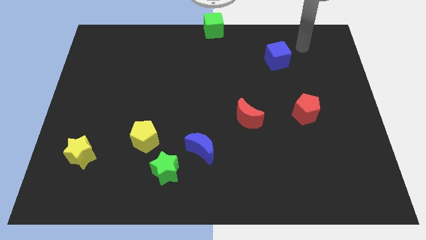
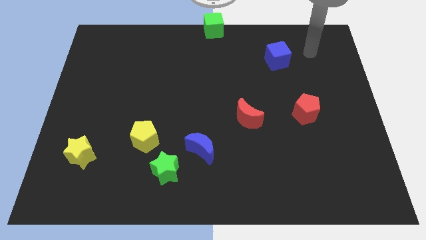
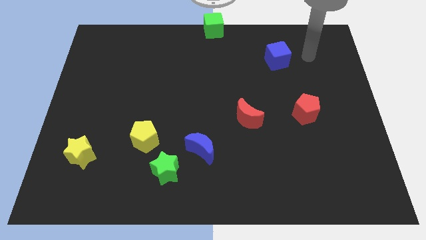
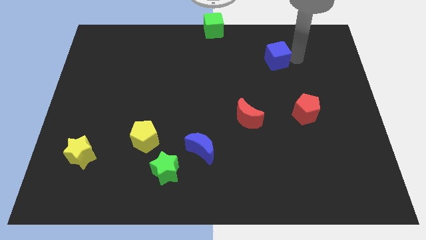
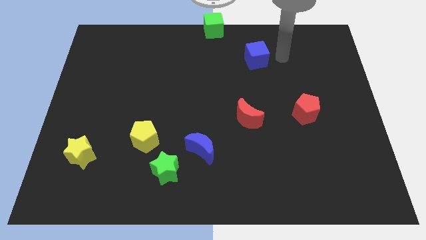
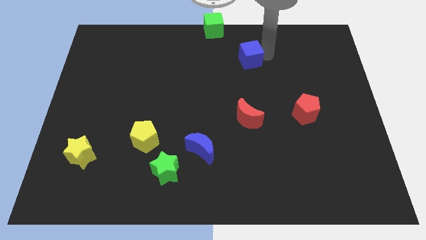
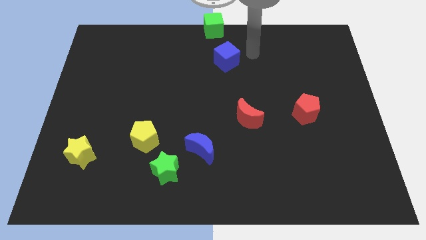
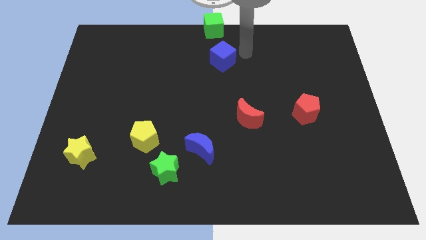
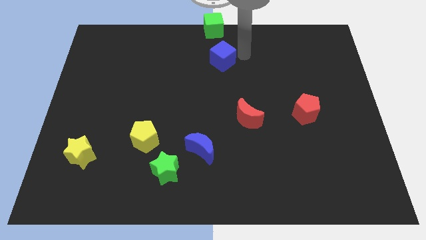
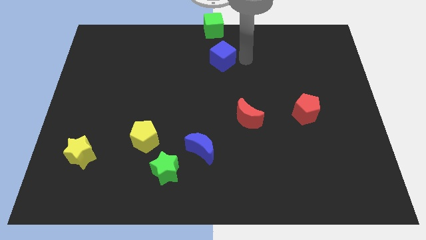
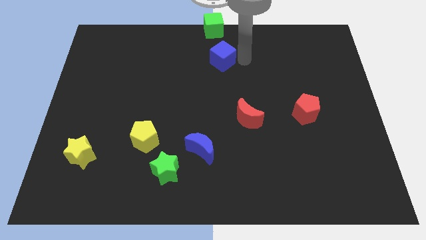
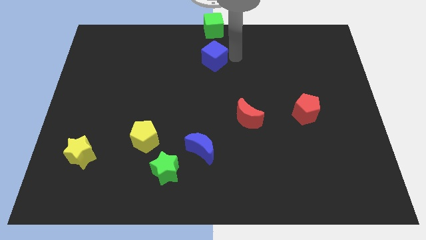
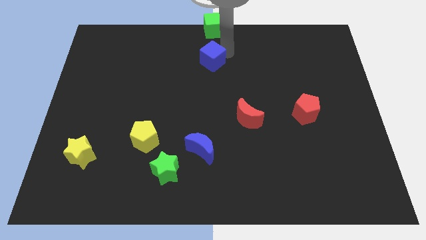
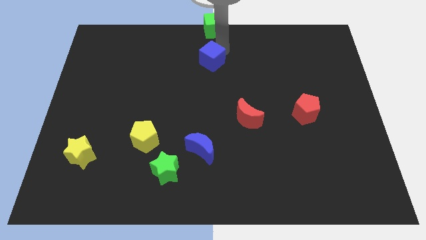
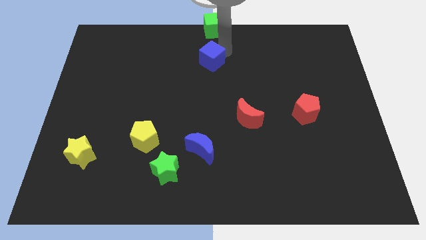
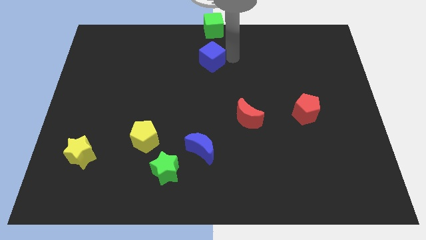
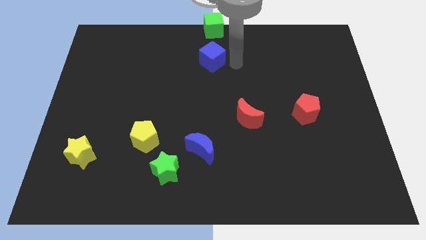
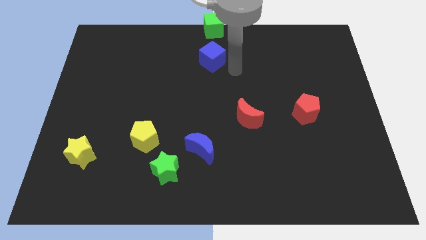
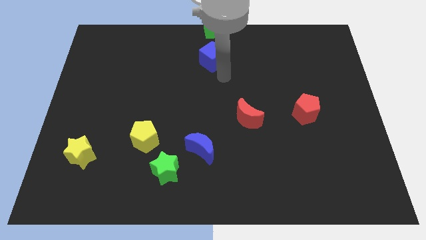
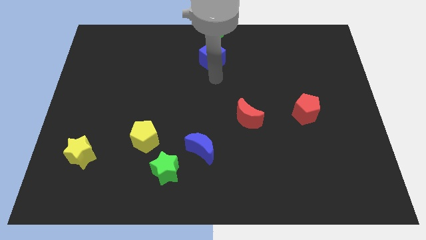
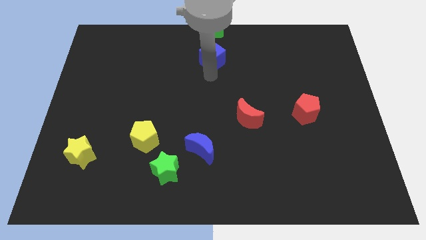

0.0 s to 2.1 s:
drag the blue cube towards the bottom of the green cube

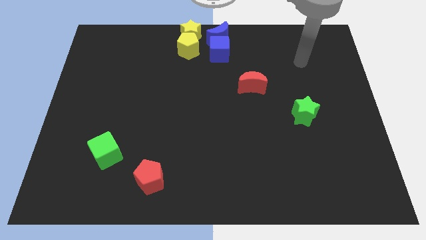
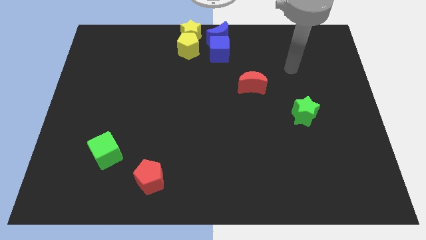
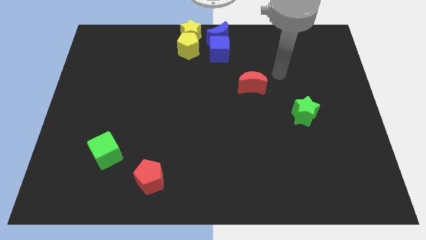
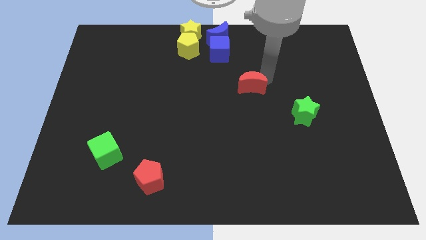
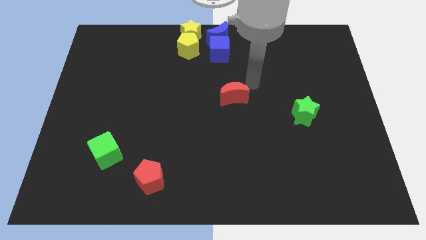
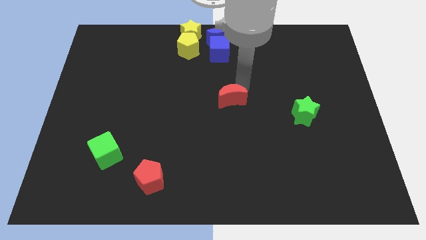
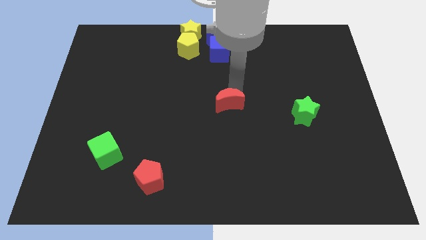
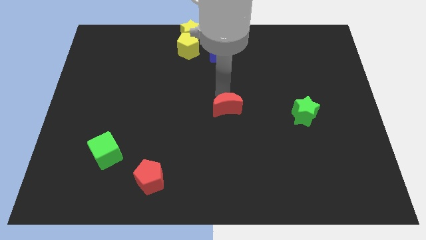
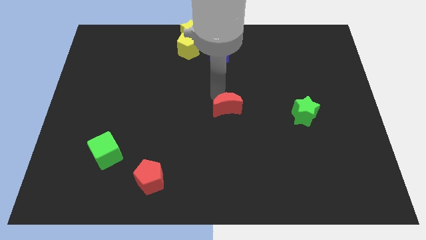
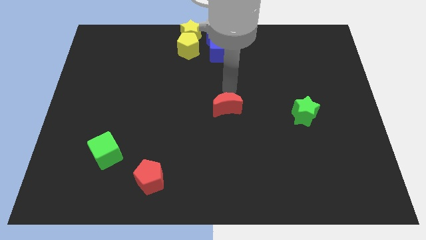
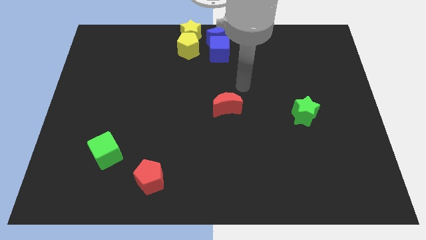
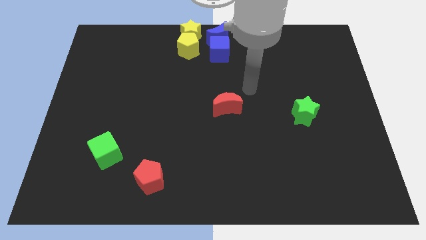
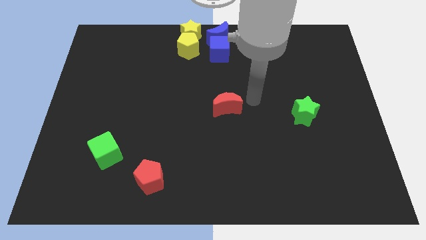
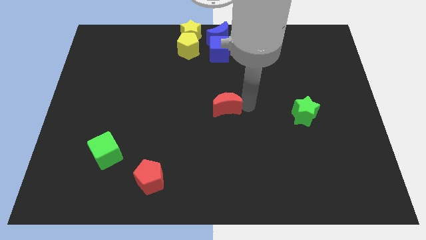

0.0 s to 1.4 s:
move the red crescent to the center

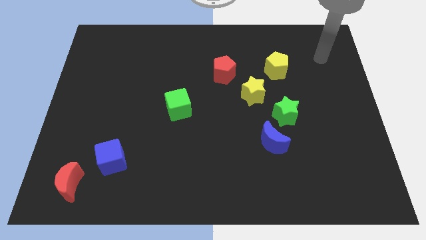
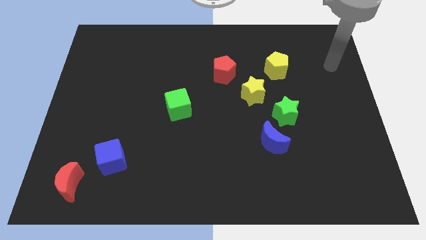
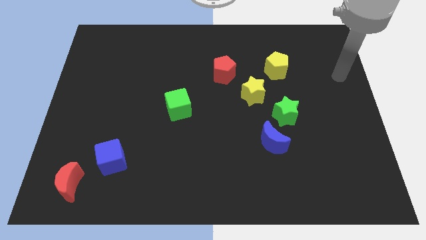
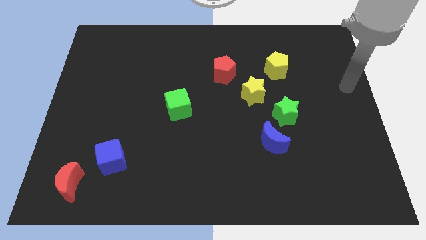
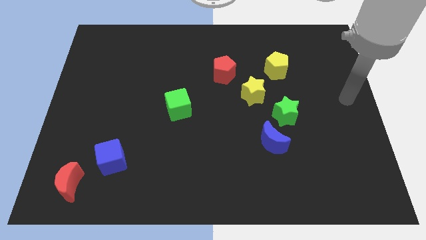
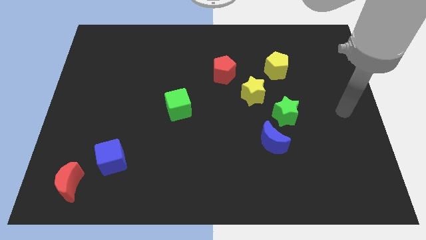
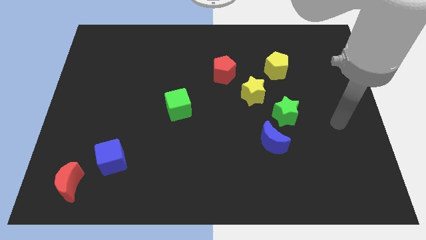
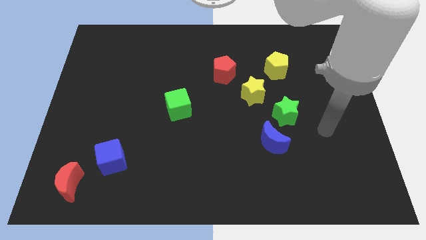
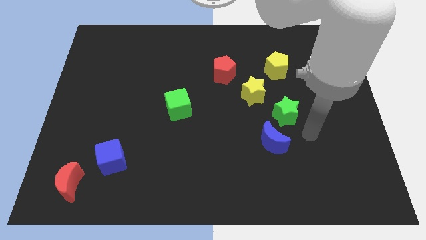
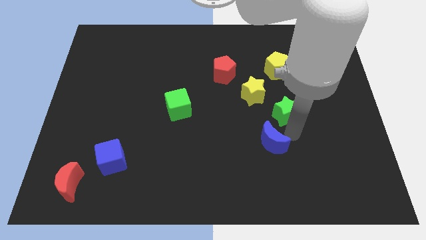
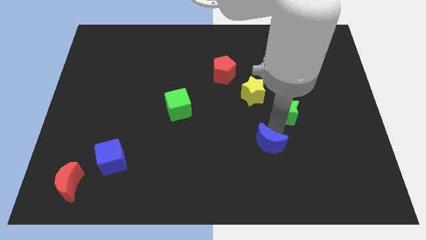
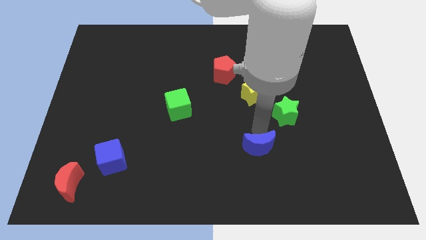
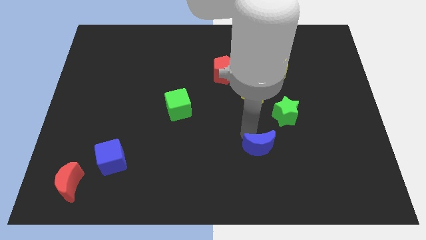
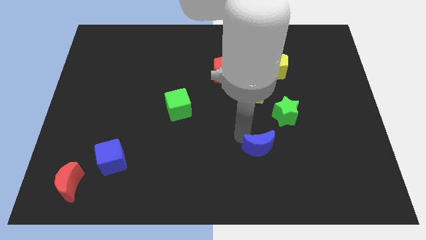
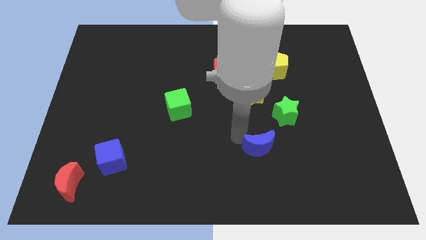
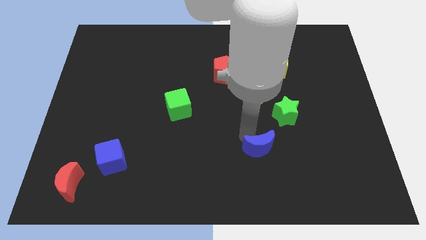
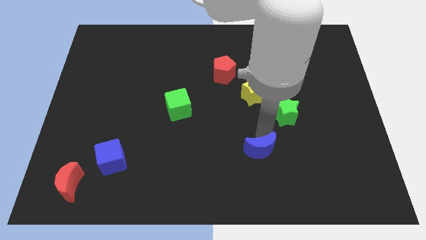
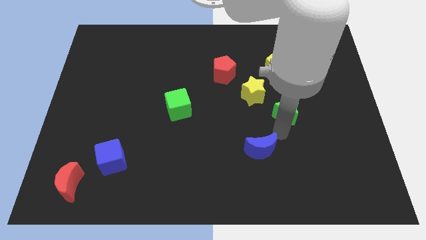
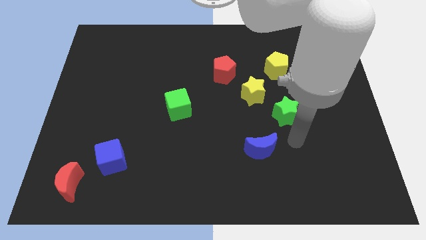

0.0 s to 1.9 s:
slide the blue crescent to the bottom left side of the green star

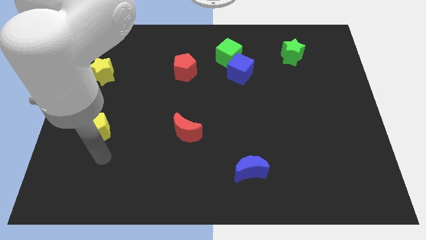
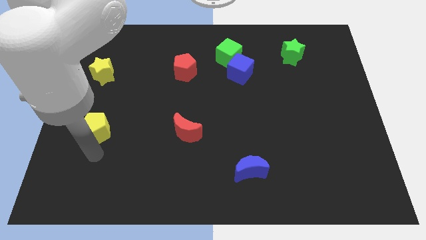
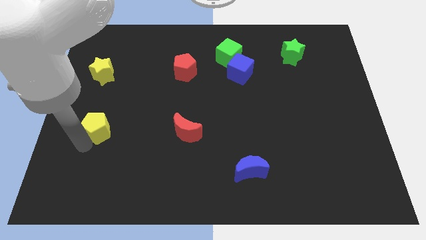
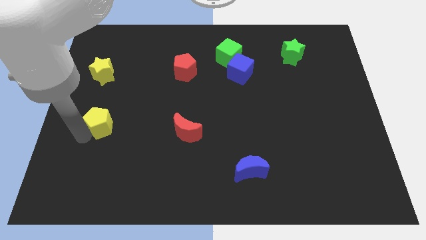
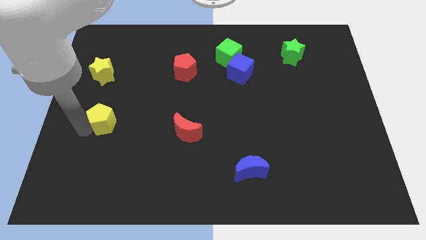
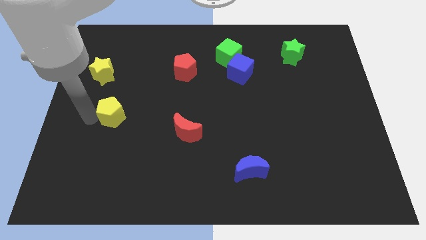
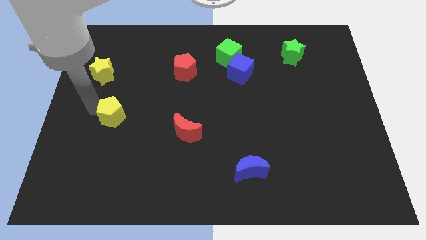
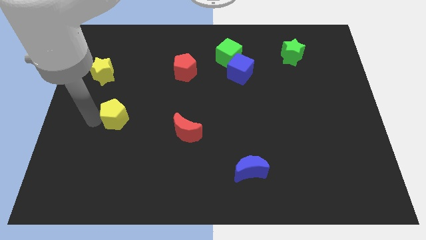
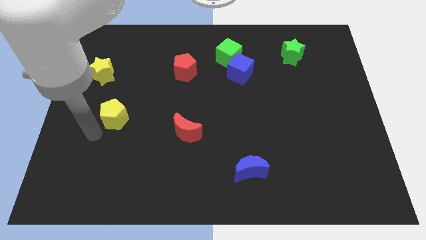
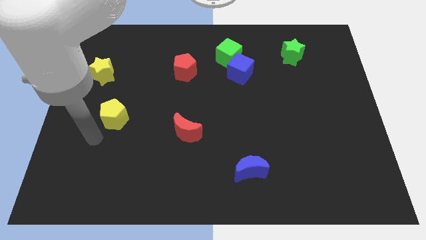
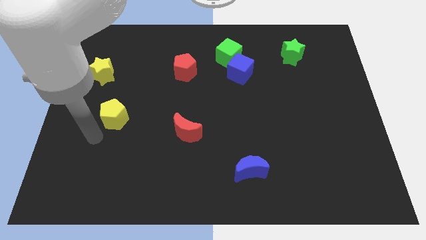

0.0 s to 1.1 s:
push the yellow pentagon parallel to the down side of the yellow star

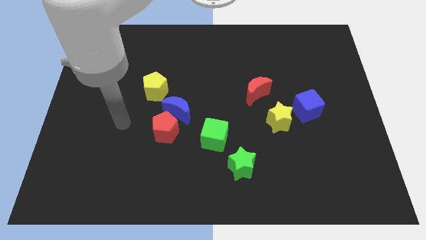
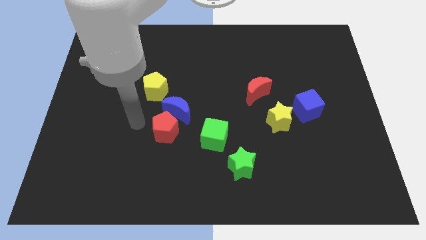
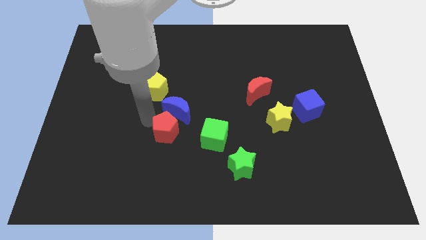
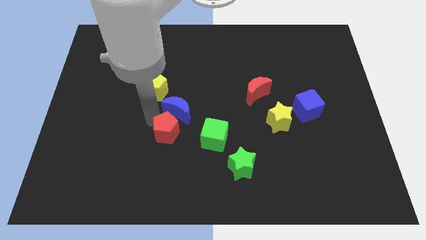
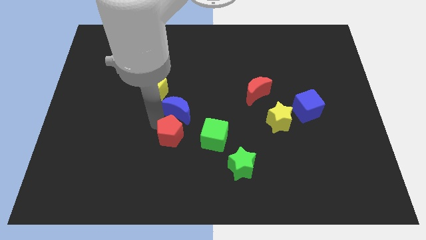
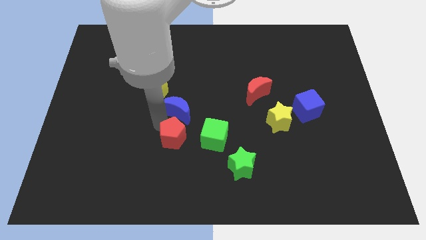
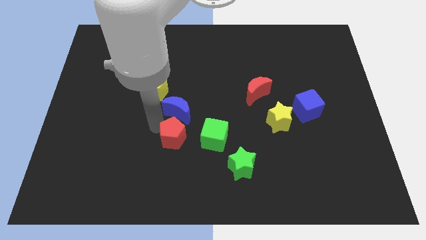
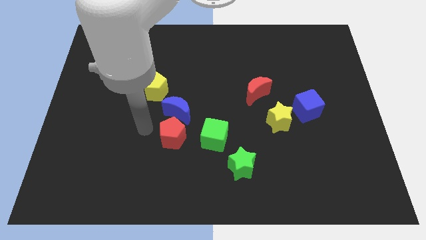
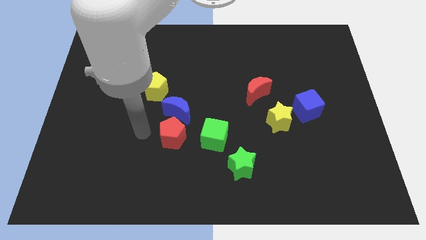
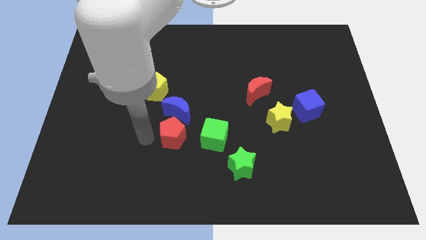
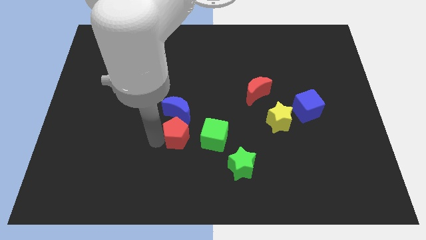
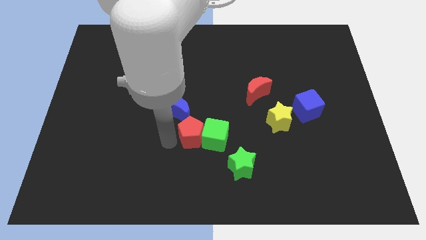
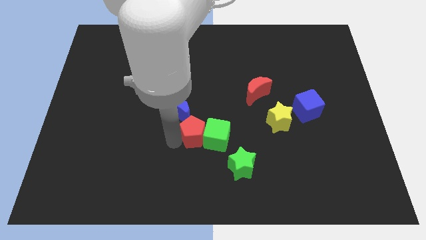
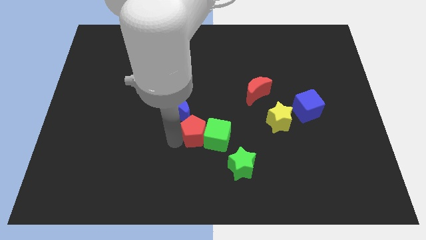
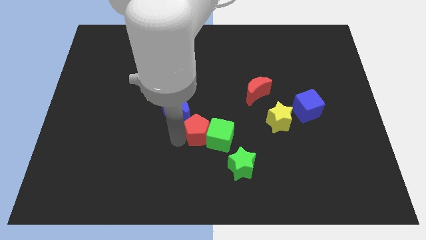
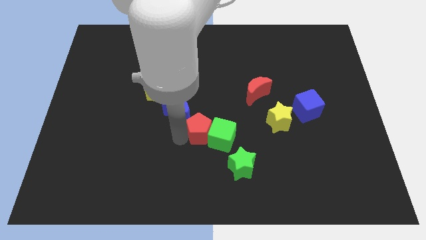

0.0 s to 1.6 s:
move the red pentagon into the green cube

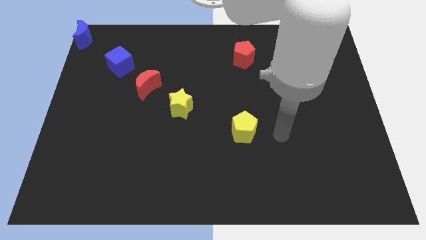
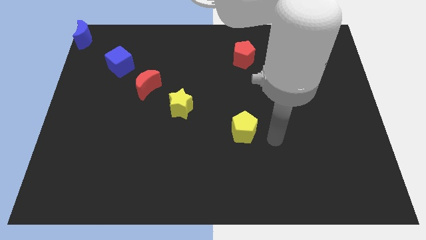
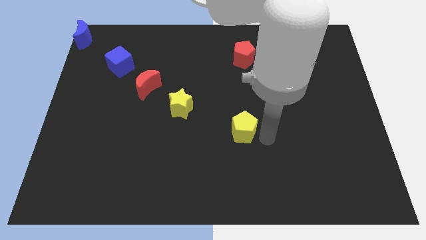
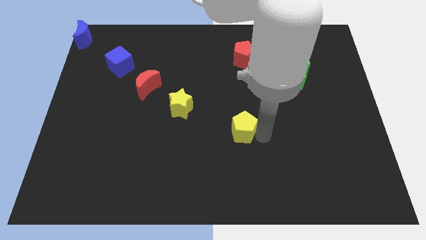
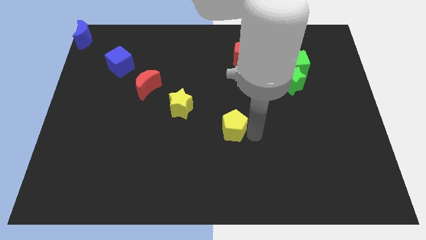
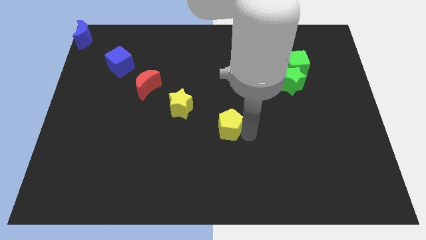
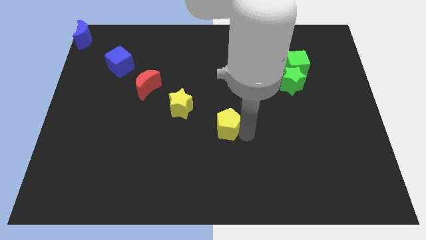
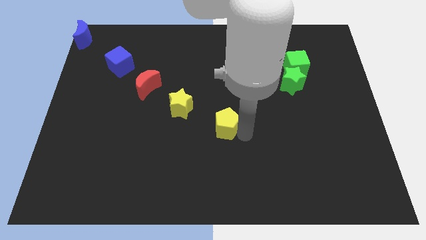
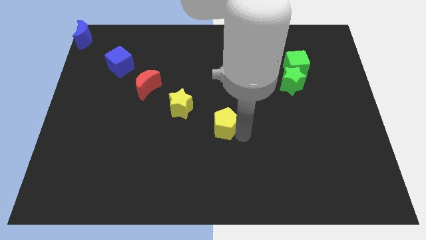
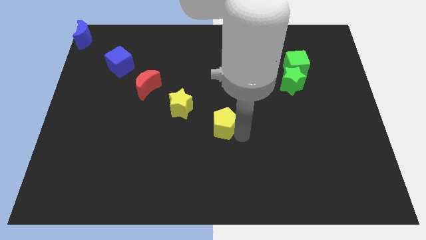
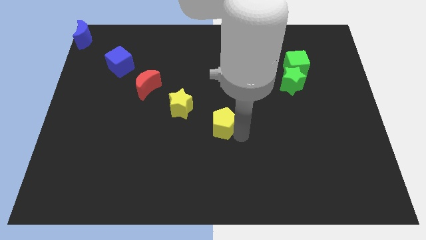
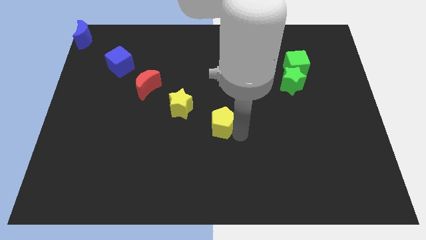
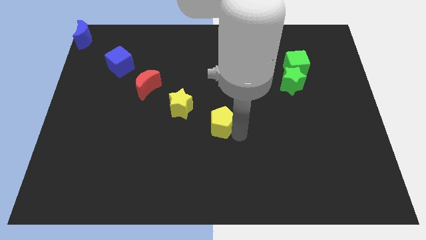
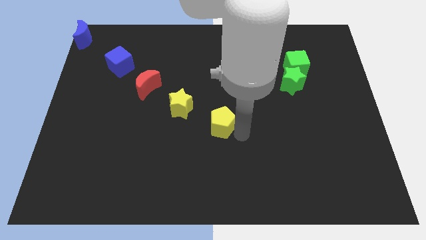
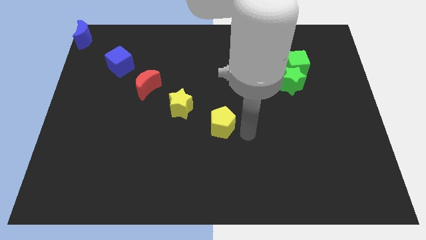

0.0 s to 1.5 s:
slightly move the yellow pentagon towards the left
